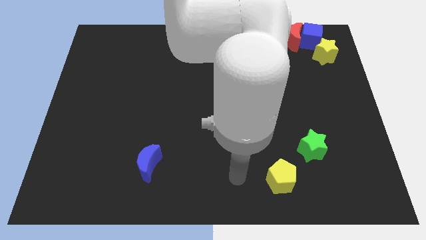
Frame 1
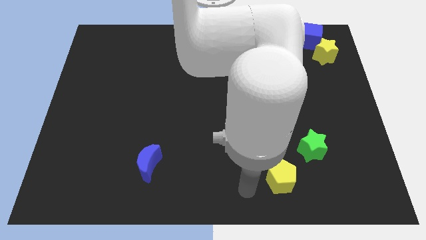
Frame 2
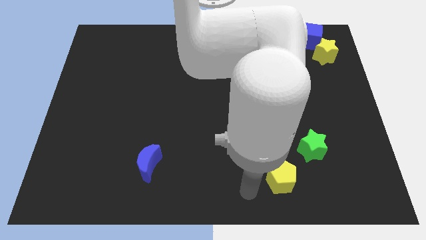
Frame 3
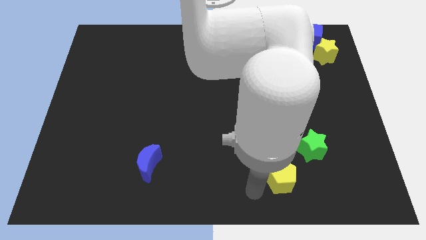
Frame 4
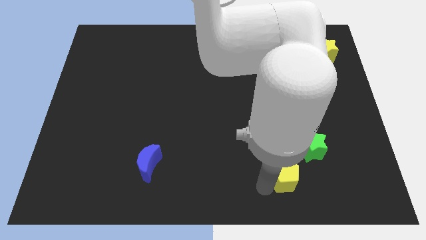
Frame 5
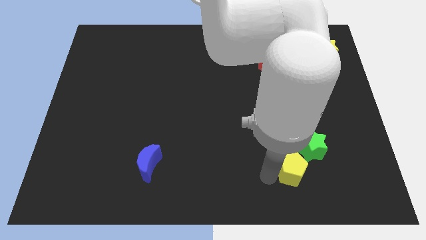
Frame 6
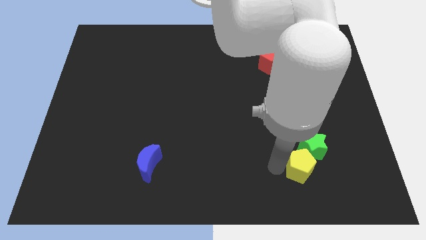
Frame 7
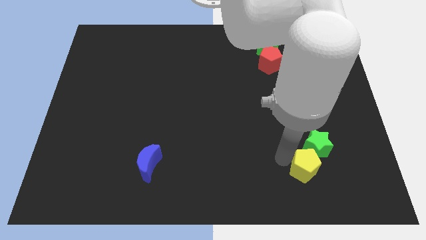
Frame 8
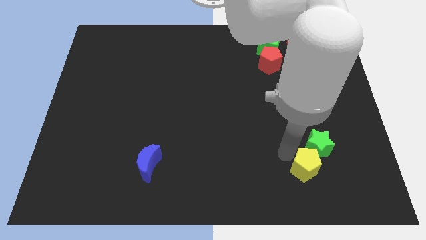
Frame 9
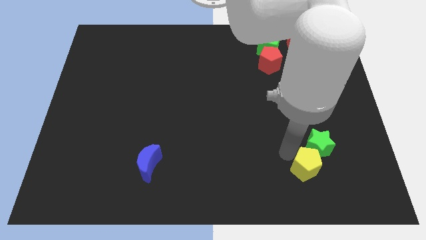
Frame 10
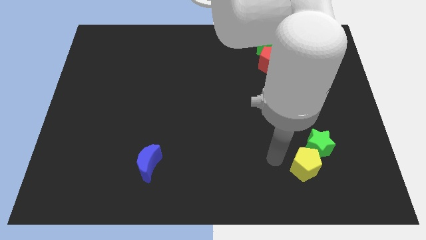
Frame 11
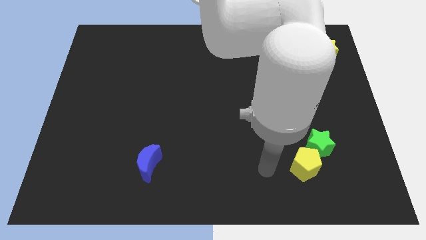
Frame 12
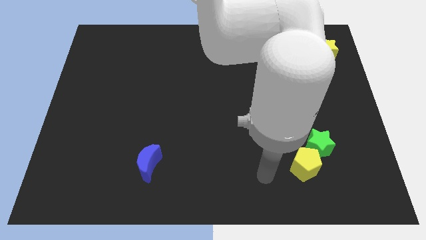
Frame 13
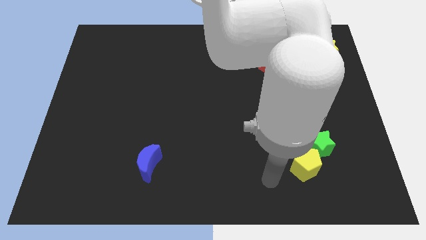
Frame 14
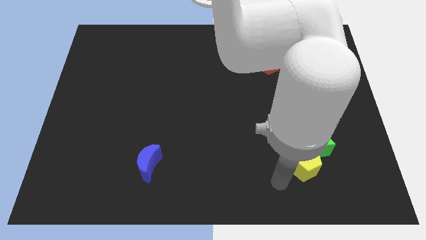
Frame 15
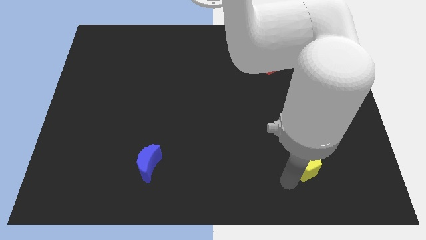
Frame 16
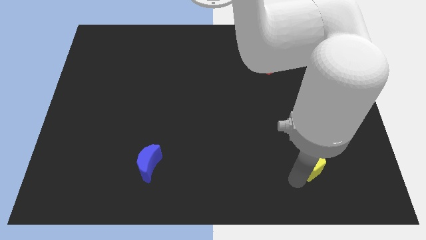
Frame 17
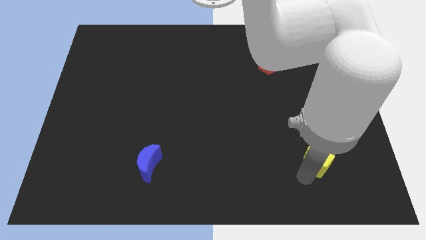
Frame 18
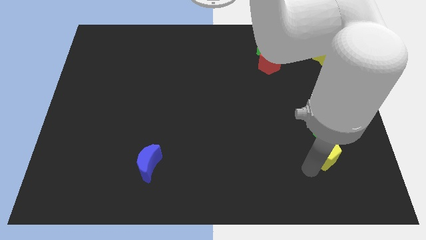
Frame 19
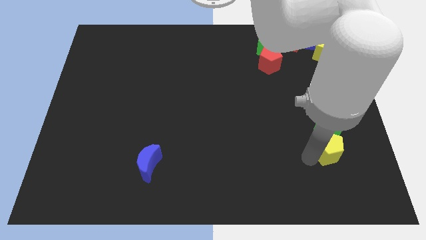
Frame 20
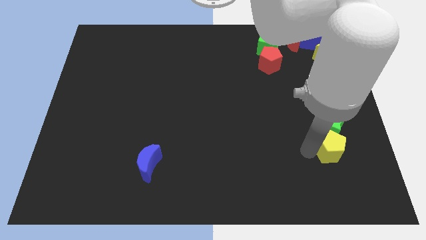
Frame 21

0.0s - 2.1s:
drag the yellow pentagon and green star to the right center

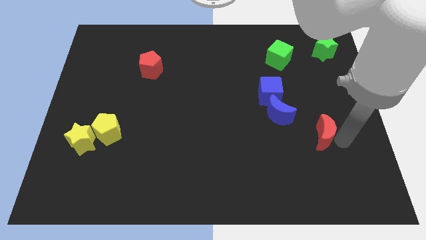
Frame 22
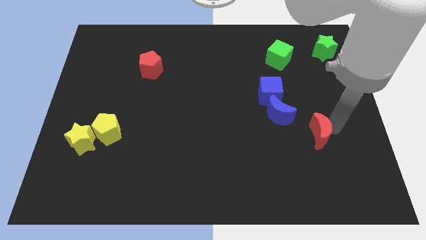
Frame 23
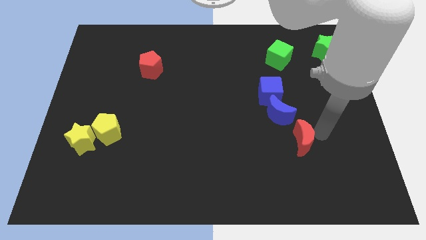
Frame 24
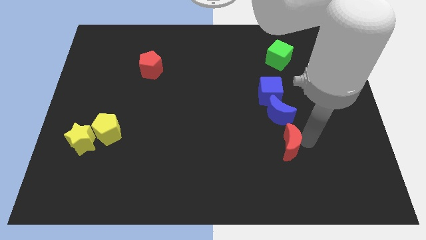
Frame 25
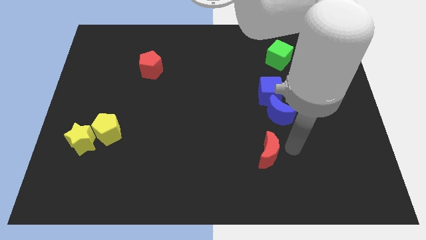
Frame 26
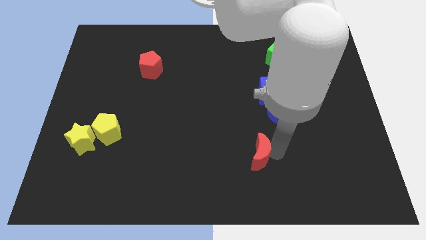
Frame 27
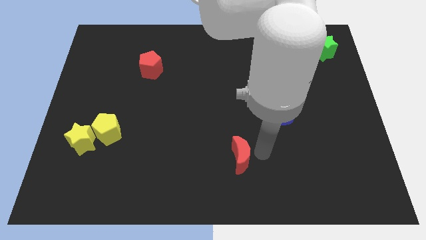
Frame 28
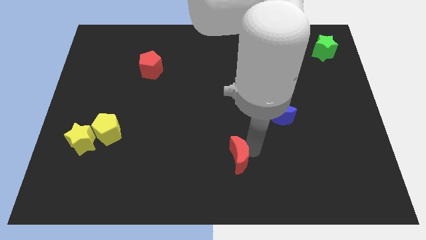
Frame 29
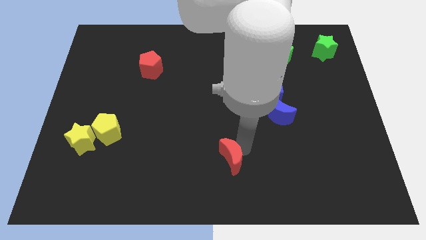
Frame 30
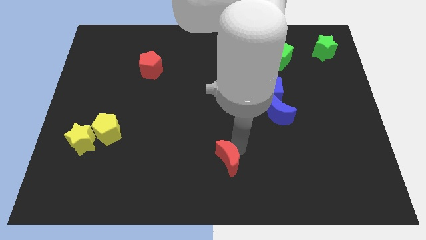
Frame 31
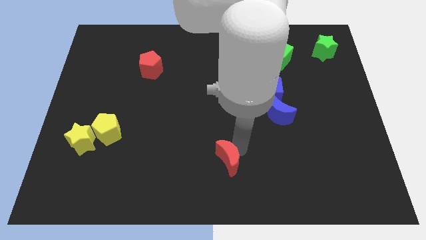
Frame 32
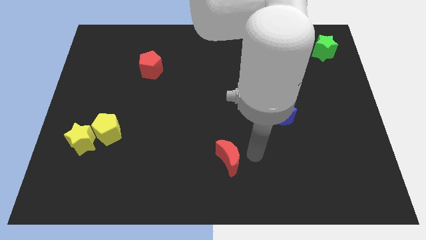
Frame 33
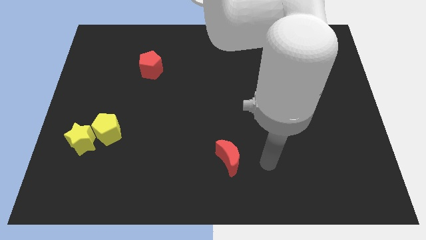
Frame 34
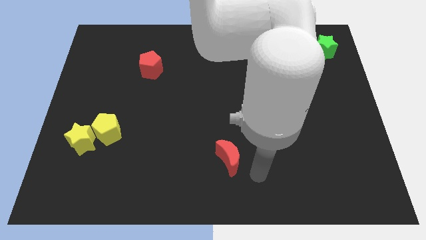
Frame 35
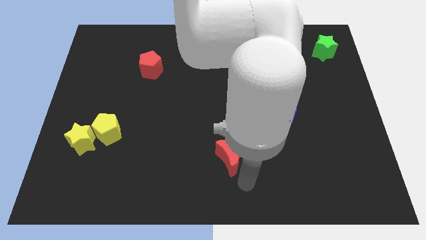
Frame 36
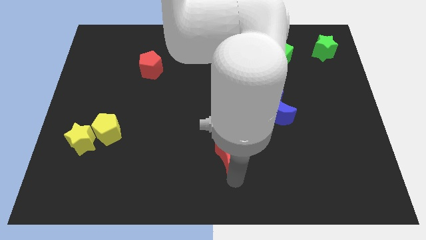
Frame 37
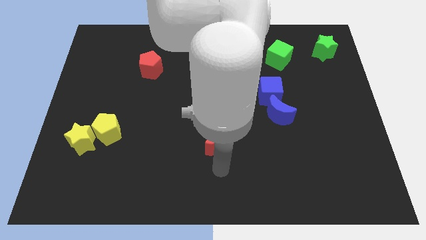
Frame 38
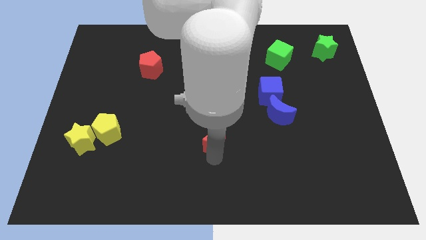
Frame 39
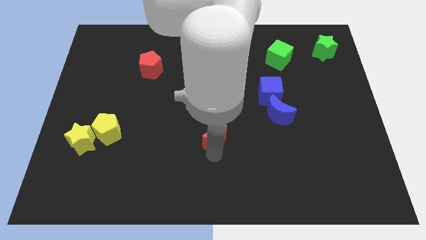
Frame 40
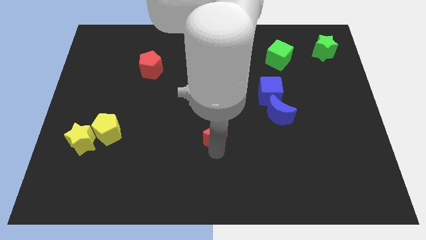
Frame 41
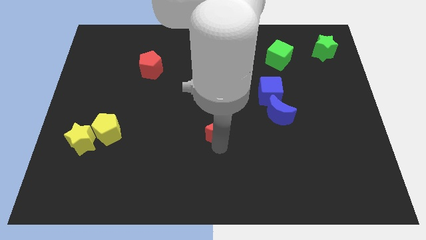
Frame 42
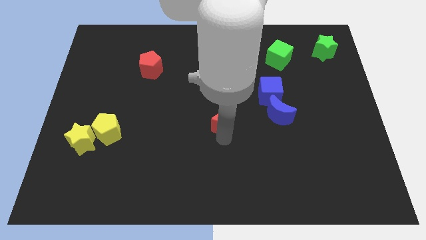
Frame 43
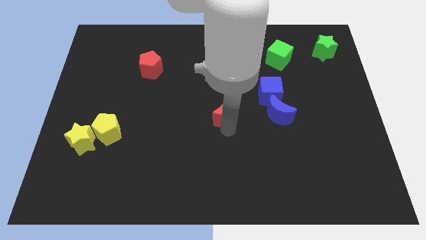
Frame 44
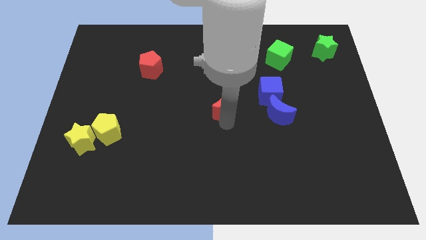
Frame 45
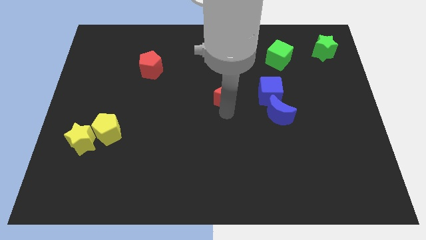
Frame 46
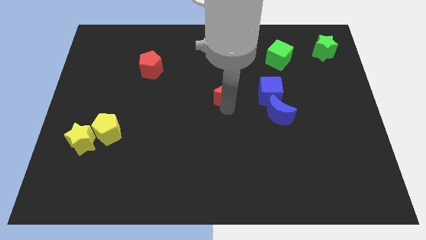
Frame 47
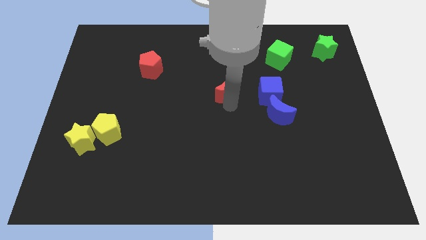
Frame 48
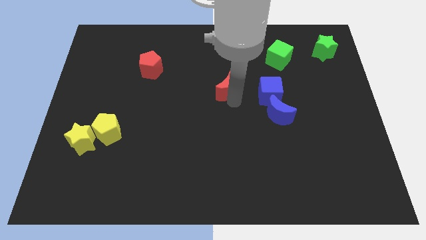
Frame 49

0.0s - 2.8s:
move the red crescent to the left of the blue cube

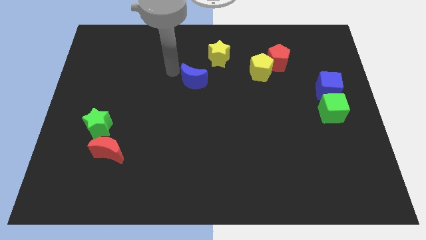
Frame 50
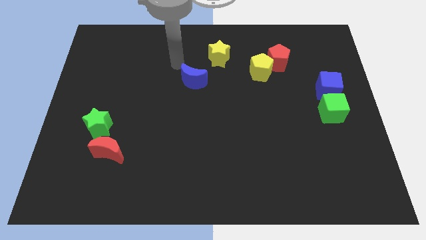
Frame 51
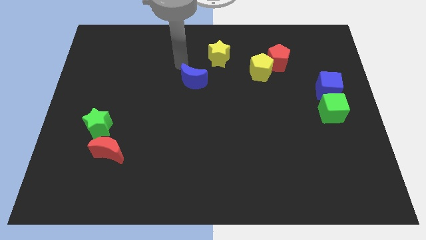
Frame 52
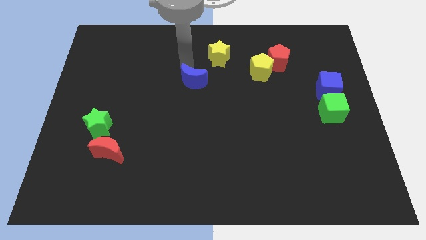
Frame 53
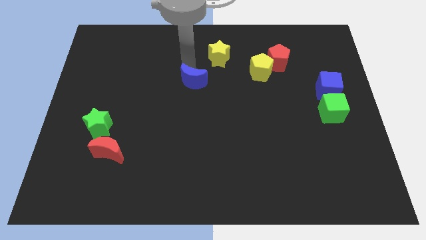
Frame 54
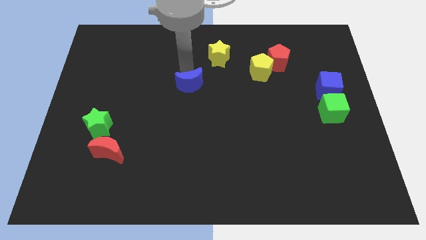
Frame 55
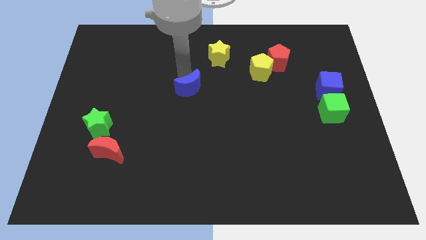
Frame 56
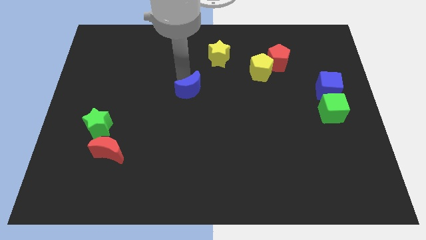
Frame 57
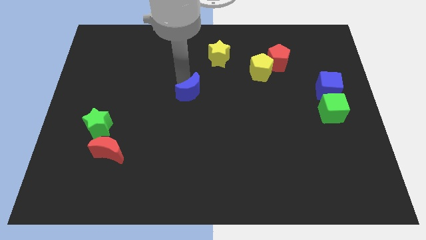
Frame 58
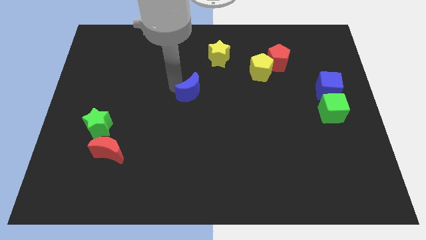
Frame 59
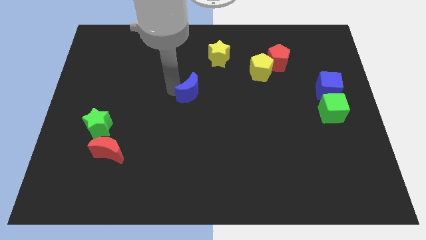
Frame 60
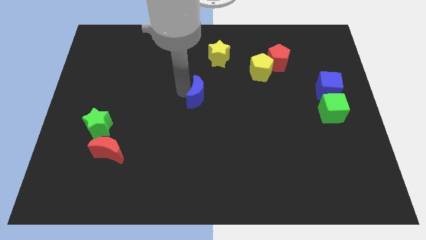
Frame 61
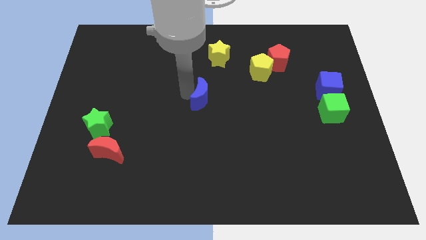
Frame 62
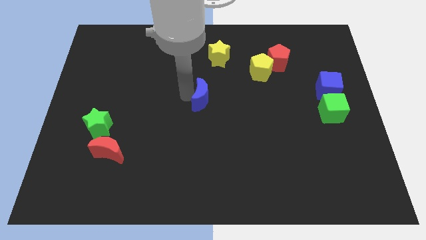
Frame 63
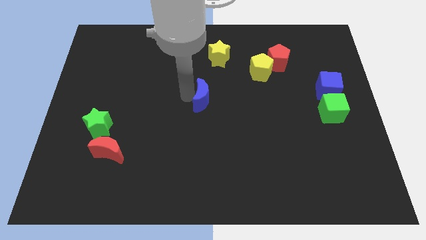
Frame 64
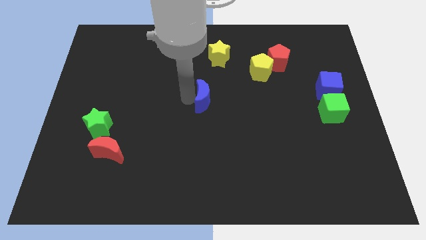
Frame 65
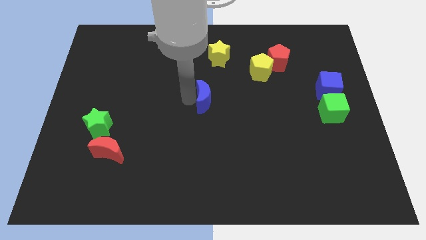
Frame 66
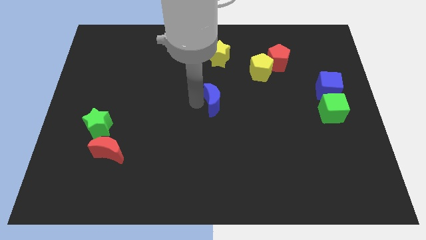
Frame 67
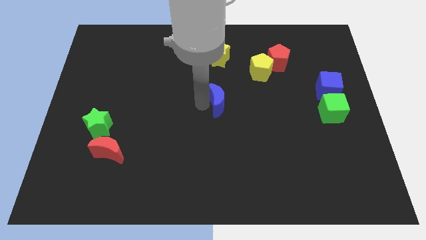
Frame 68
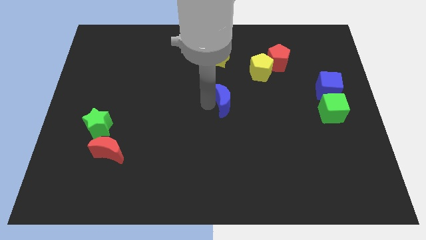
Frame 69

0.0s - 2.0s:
push the blue moon to the bottom side of the yellow star

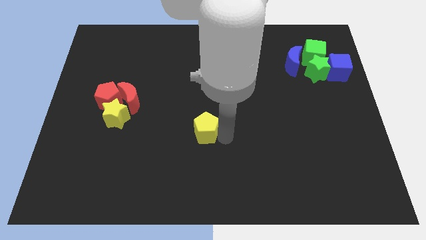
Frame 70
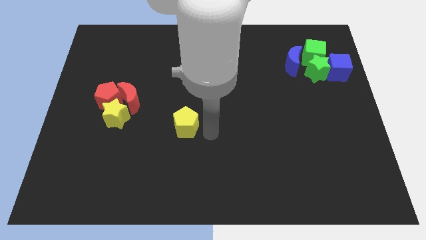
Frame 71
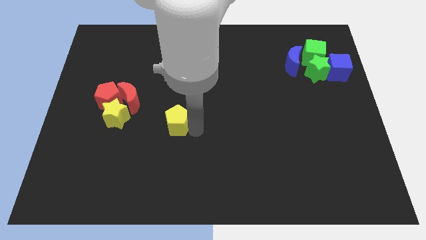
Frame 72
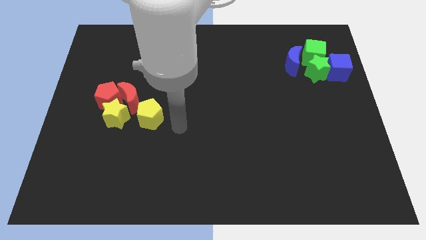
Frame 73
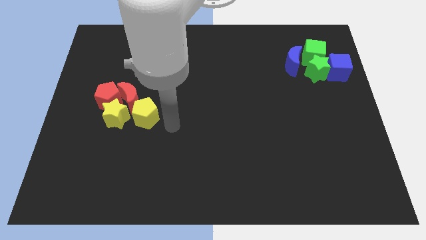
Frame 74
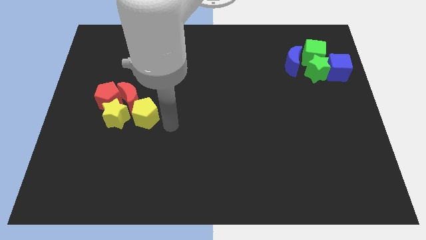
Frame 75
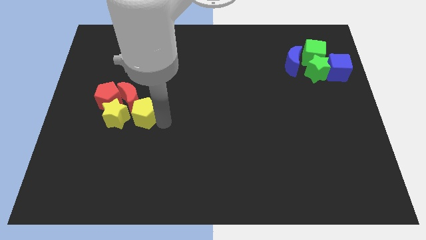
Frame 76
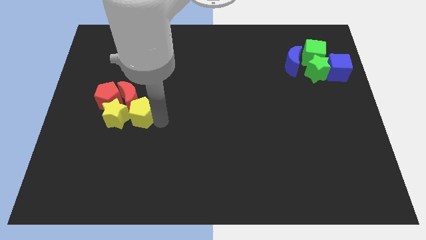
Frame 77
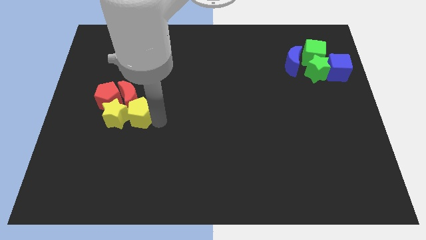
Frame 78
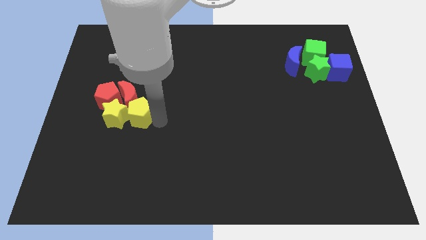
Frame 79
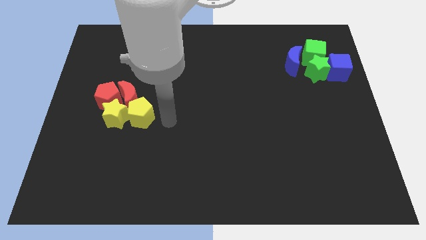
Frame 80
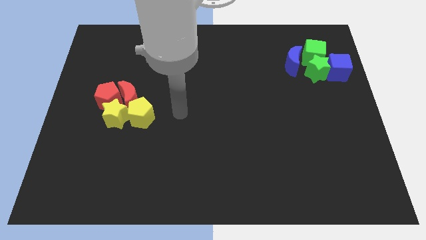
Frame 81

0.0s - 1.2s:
push the yellow pentagon towards the yellow star

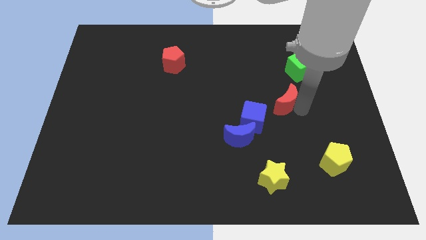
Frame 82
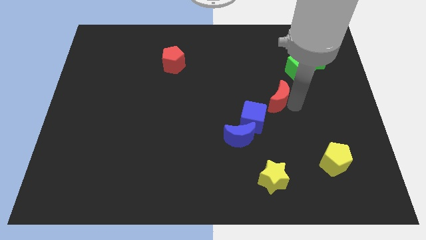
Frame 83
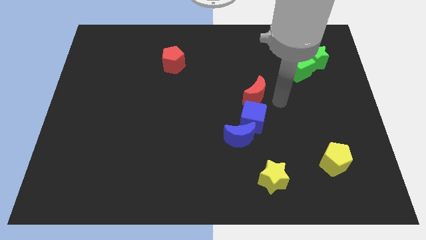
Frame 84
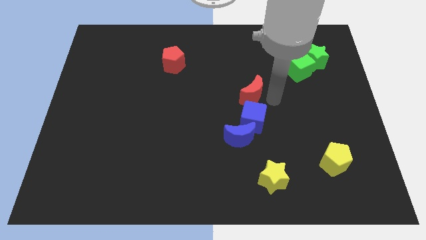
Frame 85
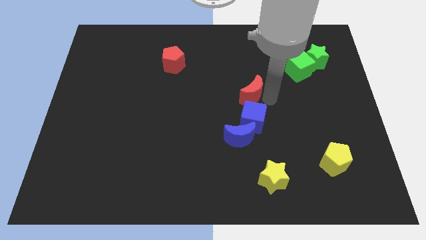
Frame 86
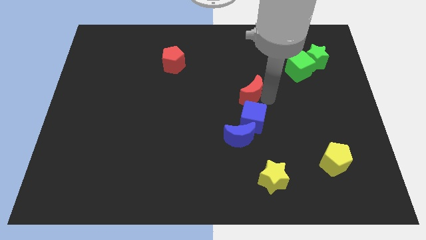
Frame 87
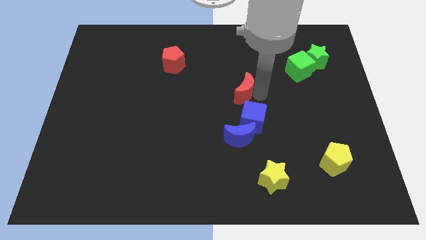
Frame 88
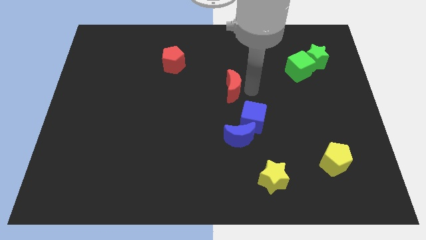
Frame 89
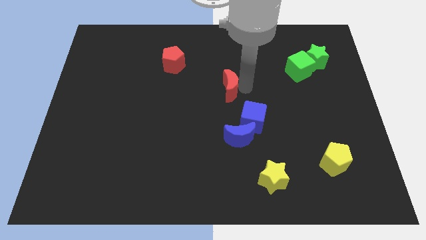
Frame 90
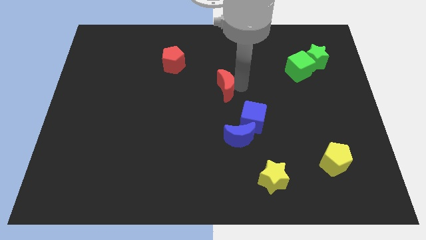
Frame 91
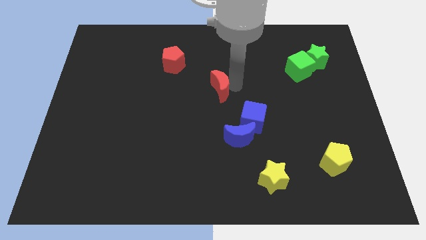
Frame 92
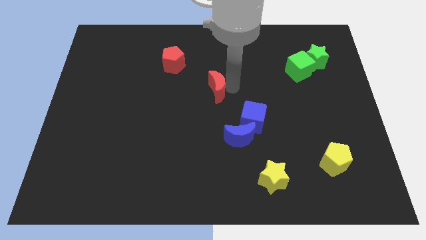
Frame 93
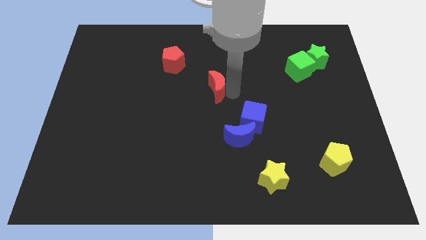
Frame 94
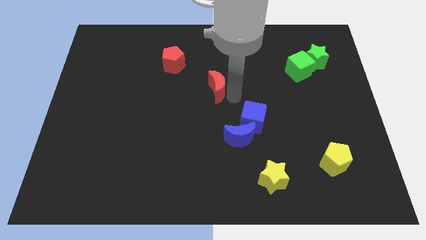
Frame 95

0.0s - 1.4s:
push the red moon between the red pentagon and blue cube diagonally
